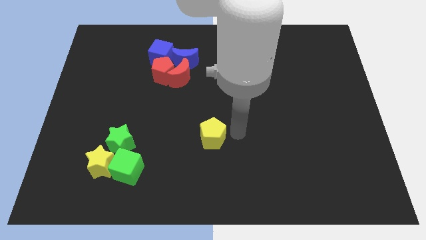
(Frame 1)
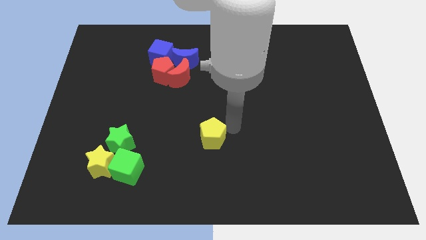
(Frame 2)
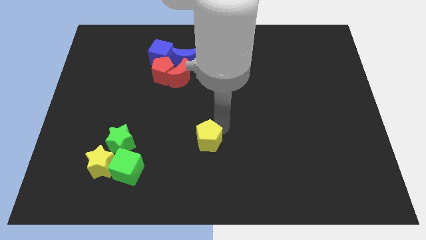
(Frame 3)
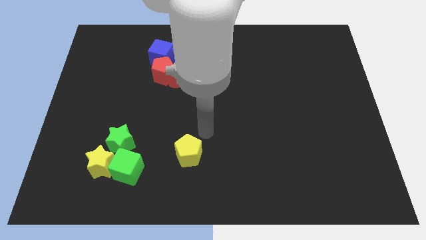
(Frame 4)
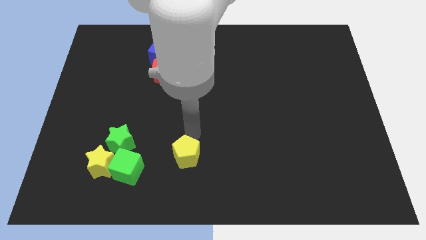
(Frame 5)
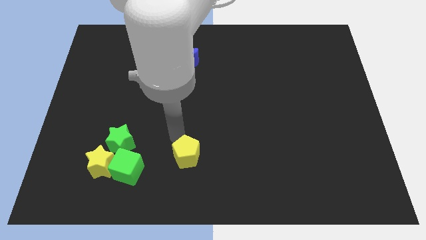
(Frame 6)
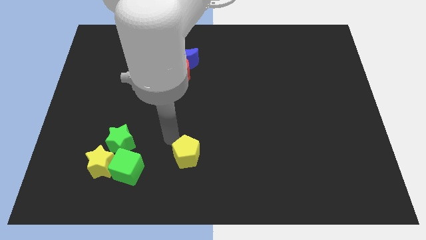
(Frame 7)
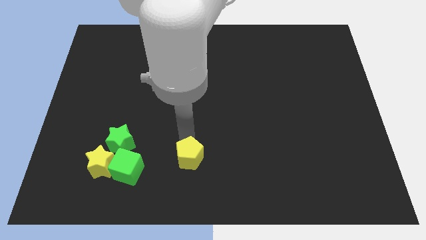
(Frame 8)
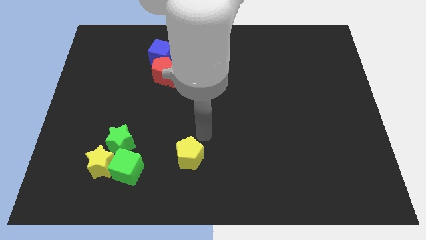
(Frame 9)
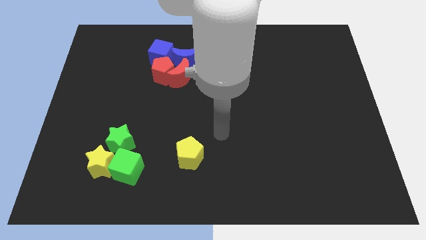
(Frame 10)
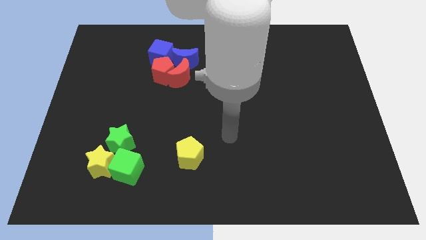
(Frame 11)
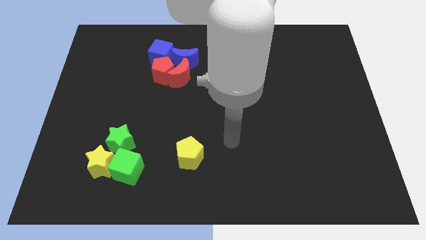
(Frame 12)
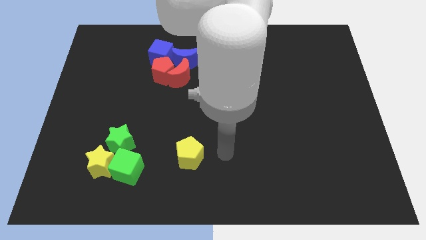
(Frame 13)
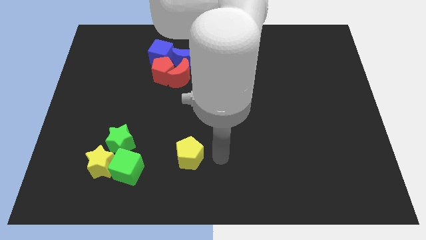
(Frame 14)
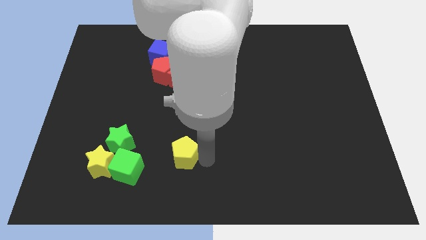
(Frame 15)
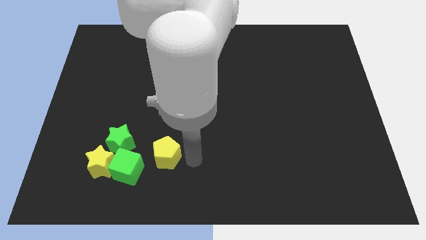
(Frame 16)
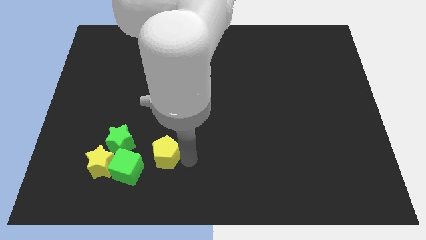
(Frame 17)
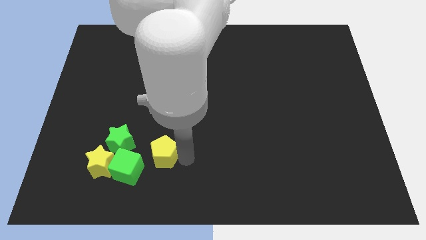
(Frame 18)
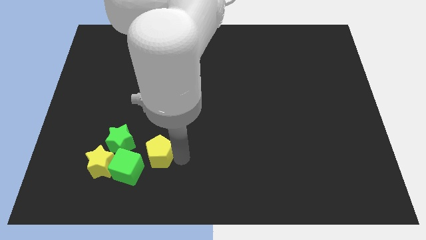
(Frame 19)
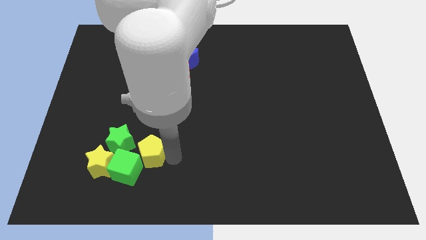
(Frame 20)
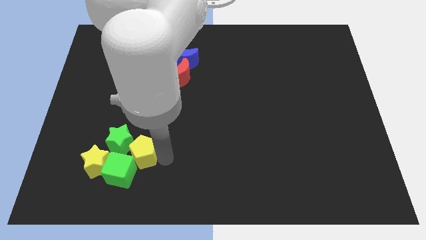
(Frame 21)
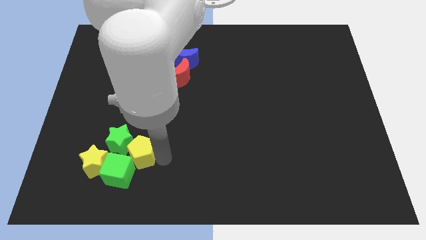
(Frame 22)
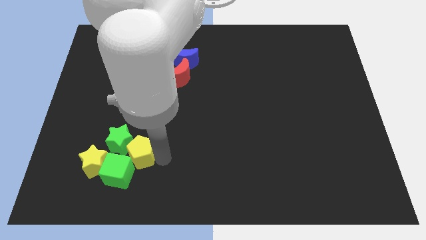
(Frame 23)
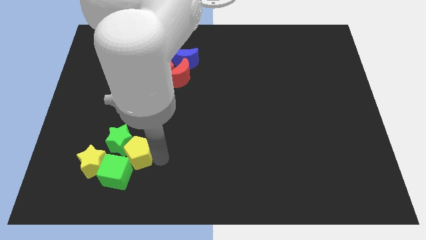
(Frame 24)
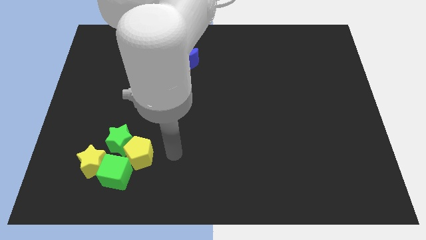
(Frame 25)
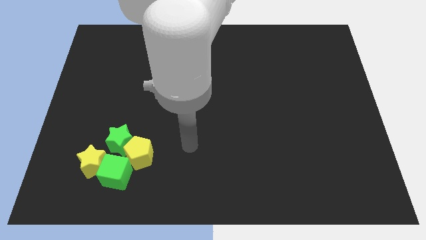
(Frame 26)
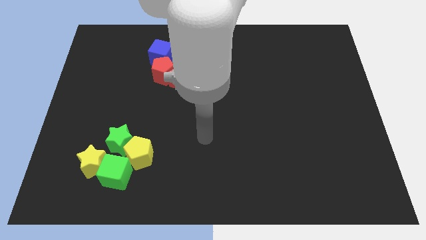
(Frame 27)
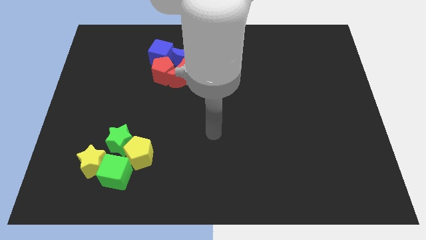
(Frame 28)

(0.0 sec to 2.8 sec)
slide the yellow pentagon into the group of blocks

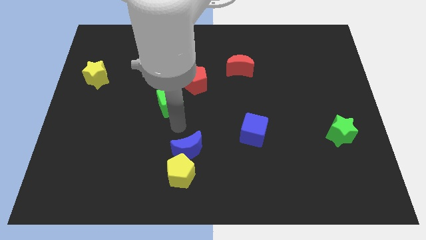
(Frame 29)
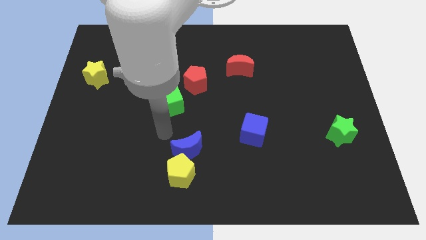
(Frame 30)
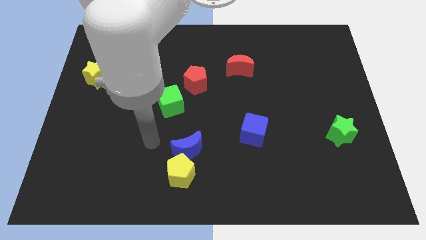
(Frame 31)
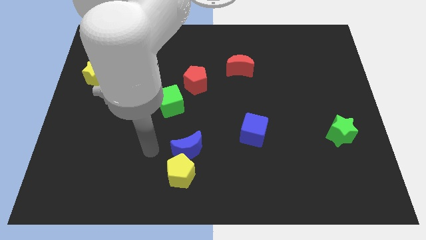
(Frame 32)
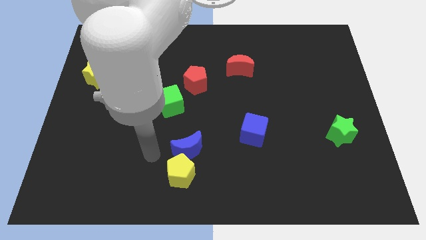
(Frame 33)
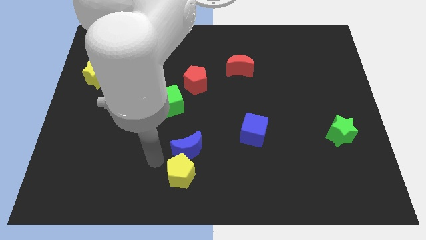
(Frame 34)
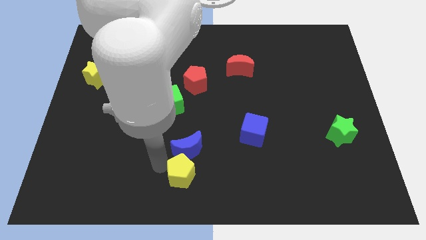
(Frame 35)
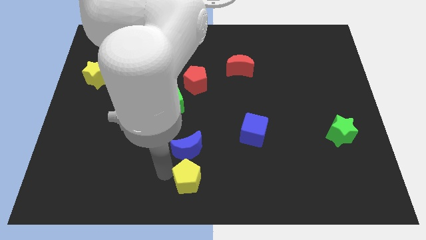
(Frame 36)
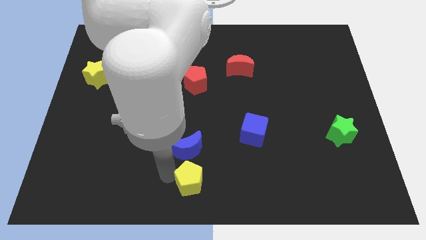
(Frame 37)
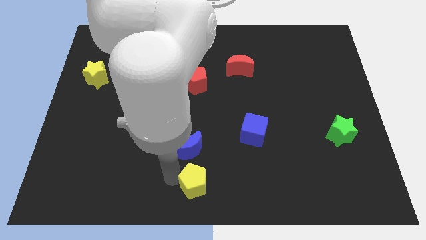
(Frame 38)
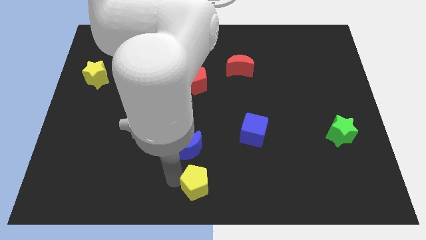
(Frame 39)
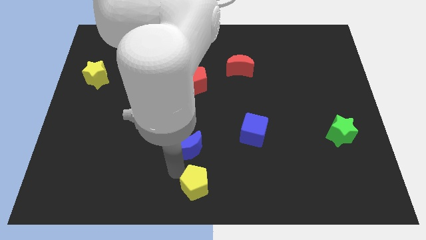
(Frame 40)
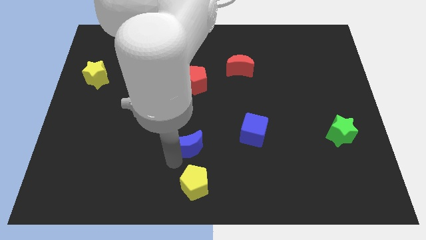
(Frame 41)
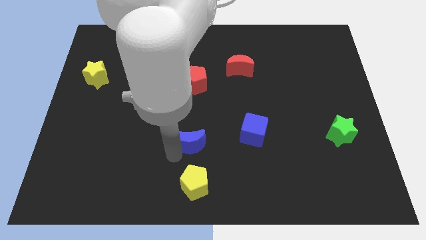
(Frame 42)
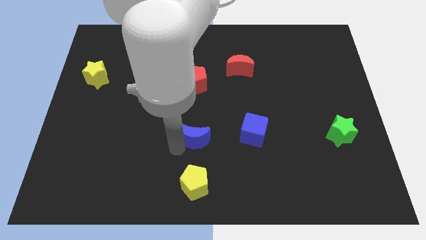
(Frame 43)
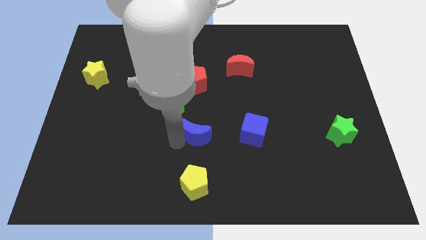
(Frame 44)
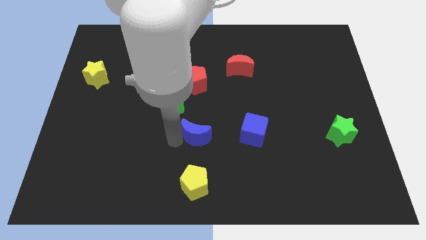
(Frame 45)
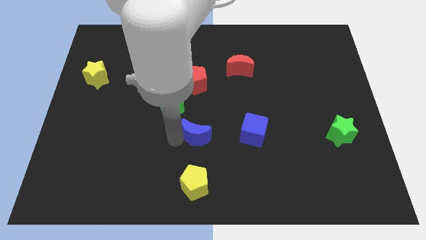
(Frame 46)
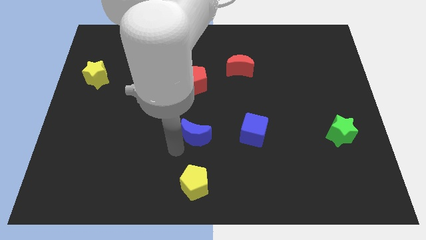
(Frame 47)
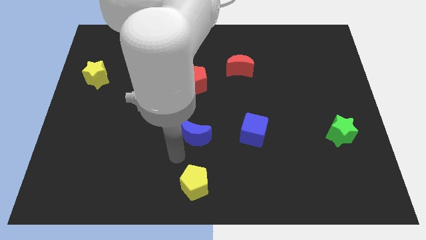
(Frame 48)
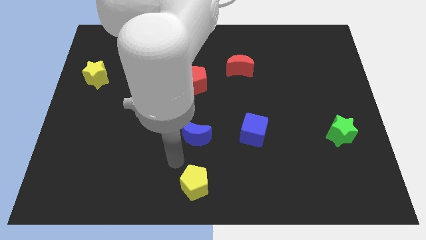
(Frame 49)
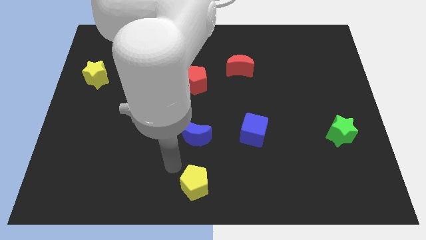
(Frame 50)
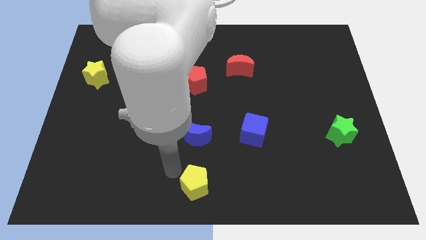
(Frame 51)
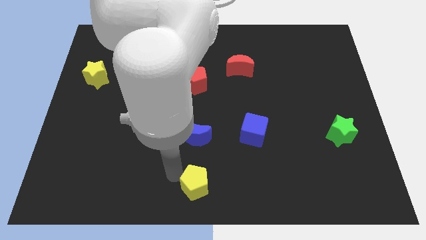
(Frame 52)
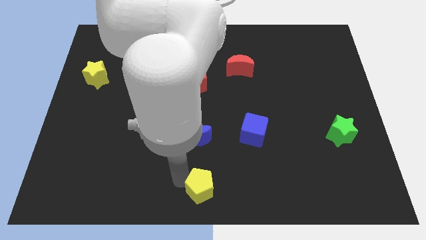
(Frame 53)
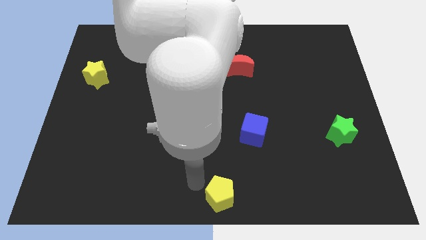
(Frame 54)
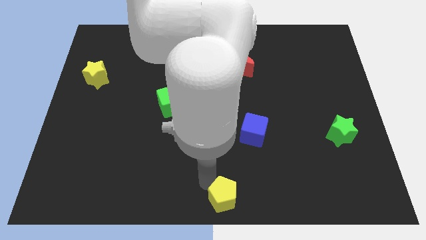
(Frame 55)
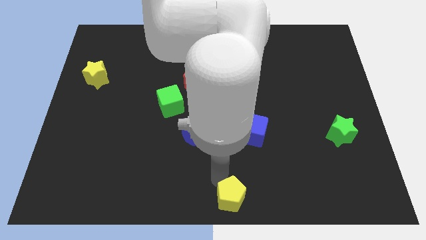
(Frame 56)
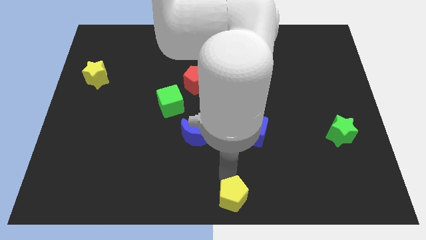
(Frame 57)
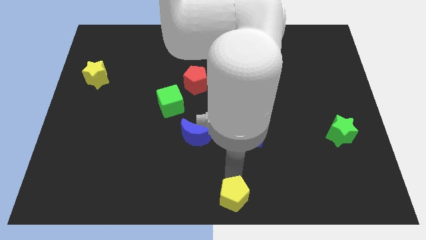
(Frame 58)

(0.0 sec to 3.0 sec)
separate the blue crescent and the yellow pentagon

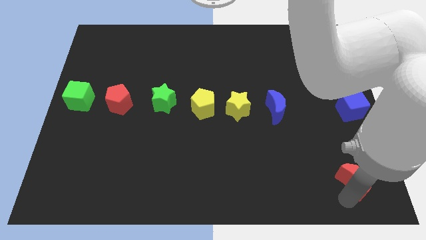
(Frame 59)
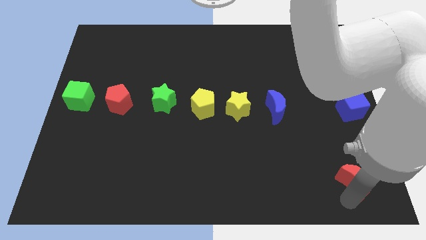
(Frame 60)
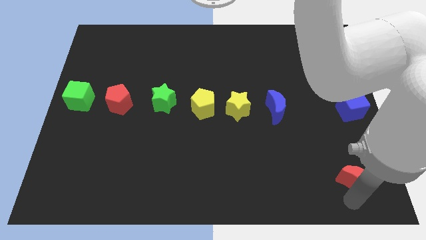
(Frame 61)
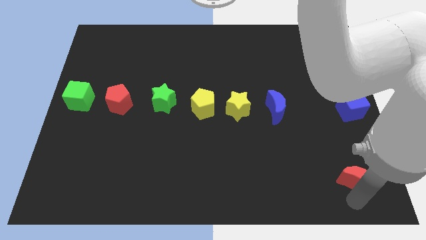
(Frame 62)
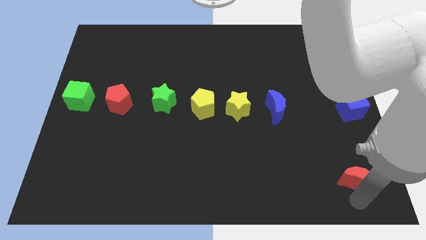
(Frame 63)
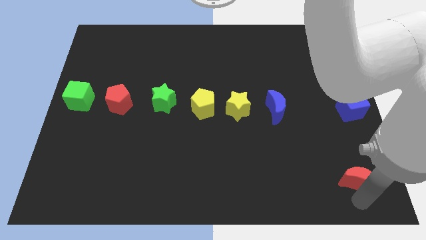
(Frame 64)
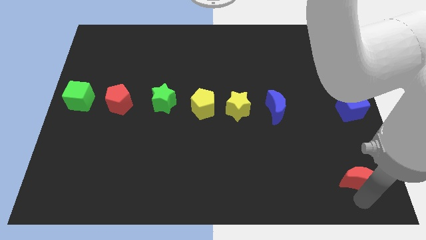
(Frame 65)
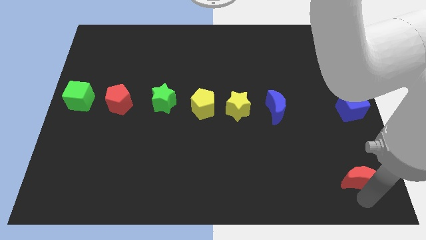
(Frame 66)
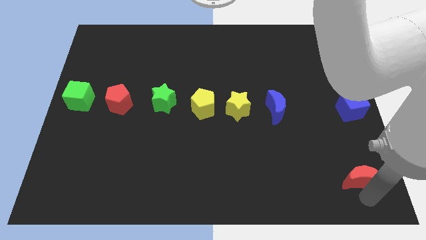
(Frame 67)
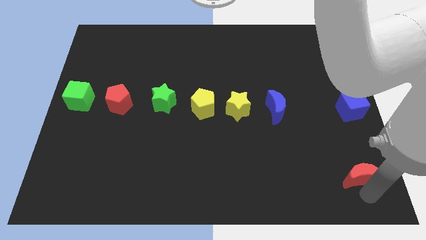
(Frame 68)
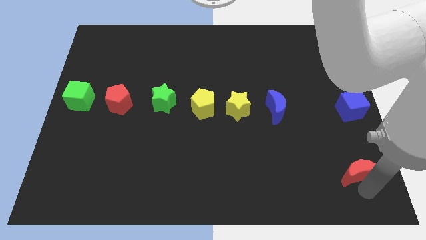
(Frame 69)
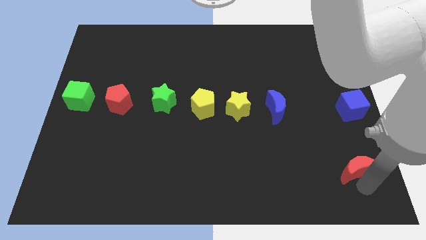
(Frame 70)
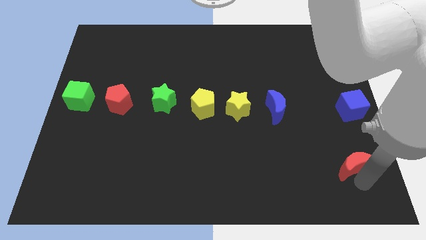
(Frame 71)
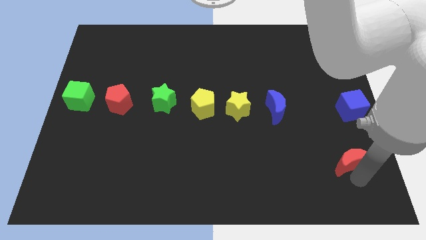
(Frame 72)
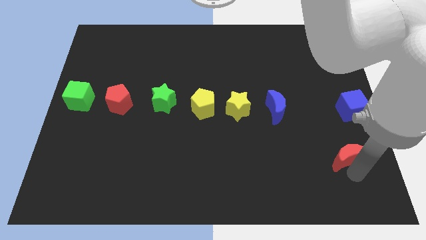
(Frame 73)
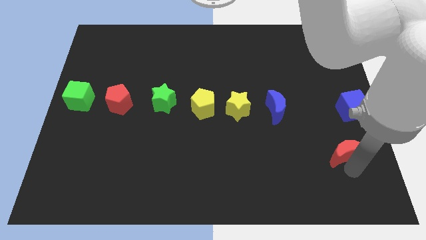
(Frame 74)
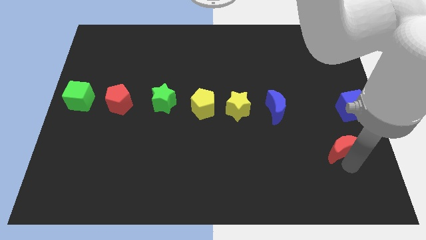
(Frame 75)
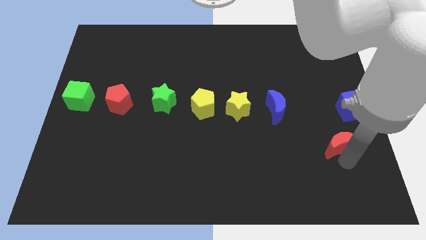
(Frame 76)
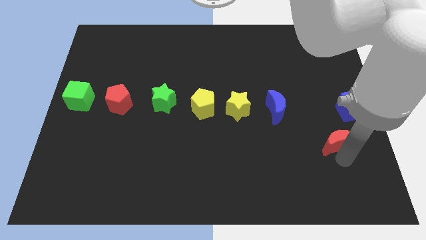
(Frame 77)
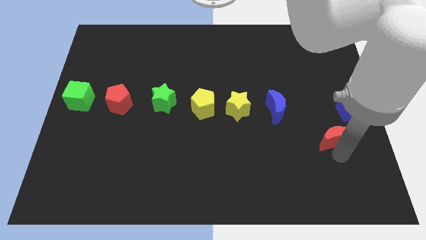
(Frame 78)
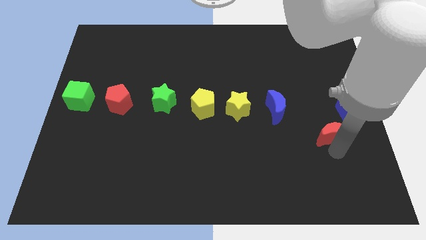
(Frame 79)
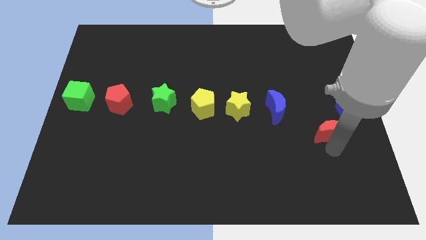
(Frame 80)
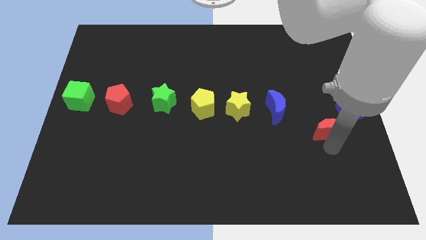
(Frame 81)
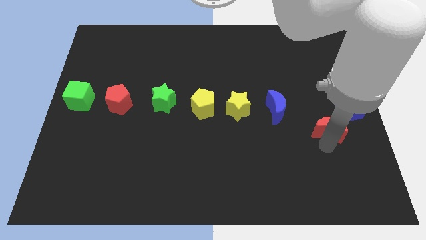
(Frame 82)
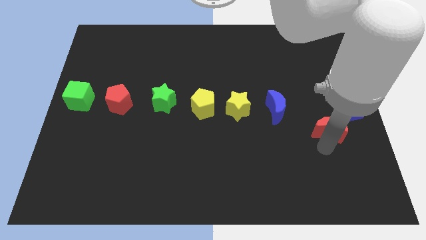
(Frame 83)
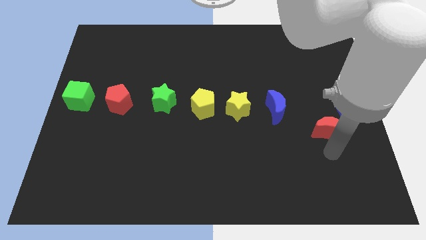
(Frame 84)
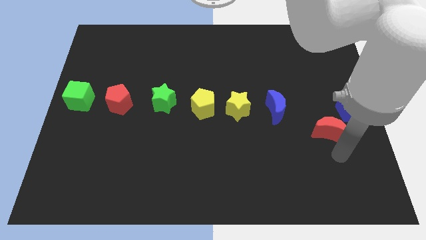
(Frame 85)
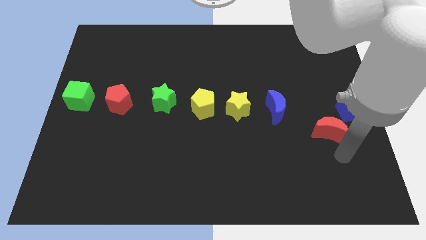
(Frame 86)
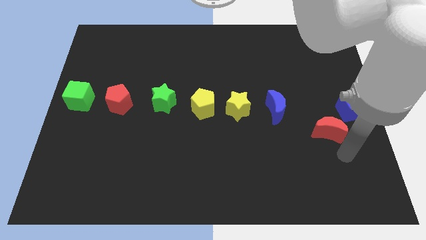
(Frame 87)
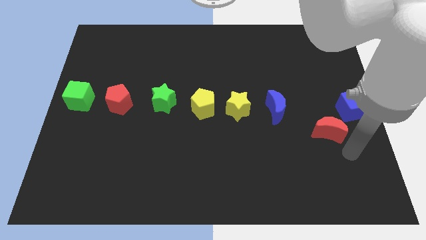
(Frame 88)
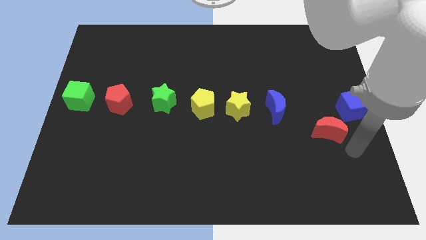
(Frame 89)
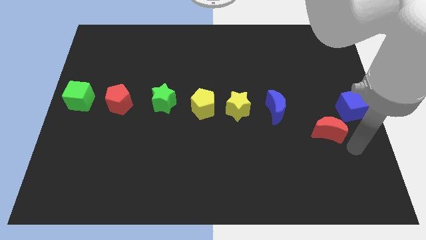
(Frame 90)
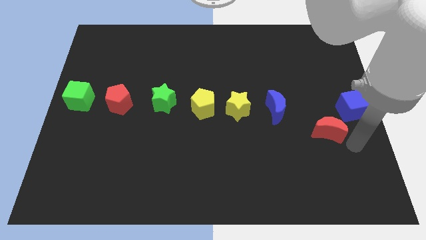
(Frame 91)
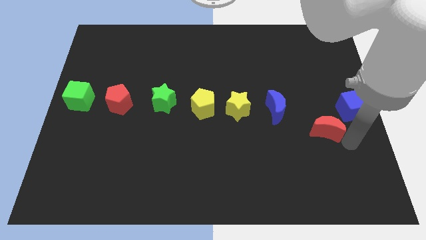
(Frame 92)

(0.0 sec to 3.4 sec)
push red moon slightly upwards
